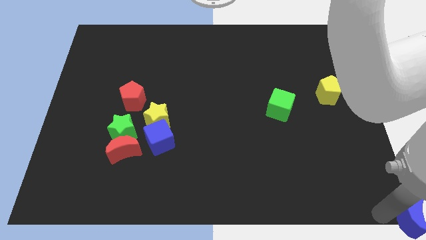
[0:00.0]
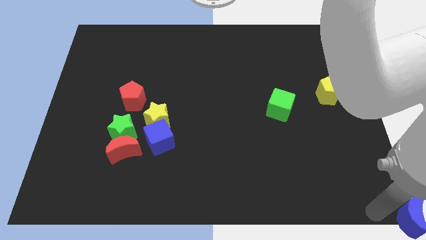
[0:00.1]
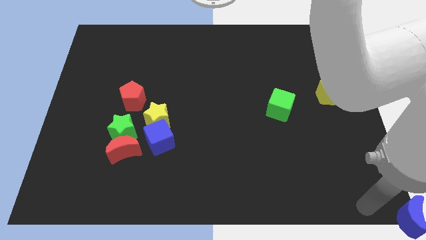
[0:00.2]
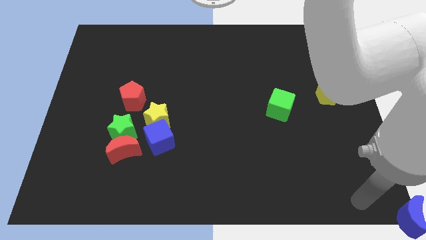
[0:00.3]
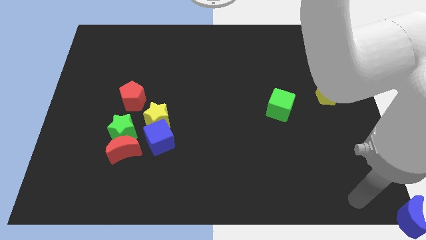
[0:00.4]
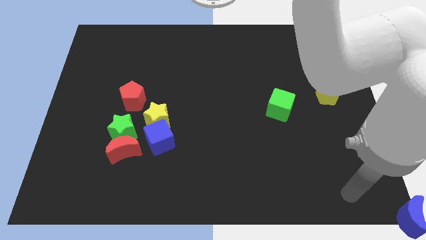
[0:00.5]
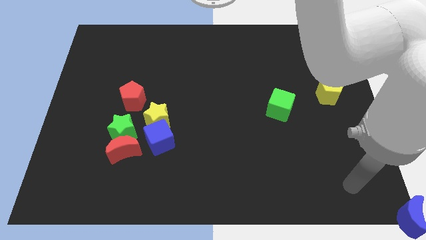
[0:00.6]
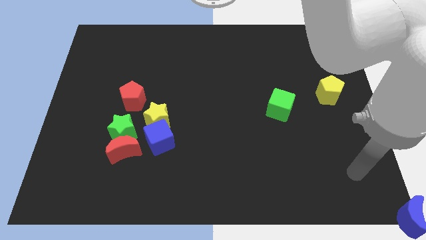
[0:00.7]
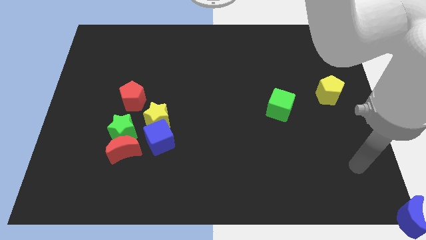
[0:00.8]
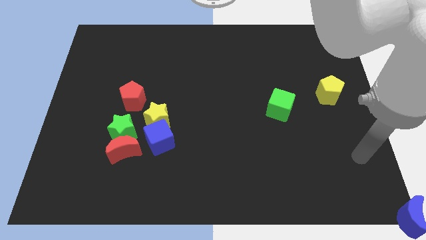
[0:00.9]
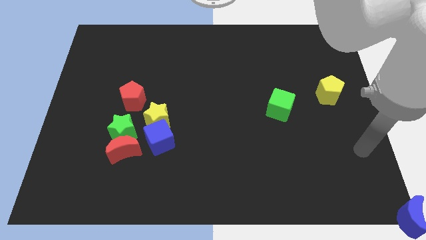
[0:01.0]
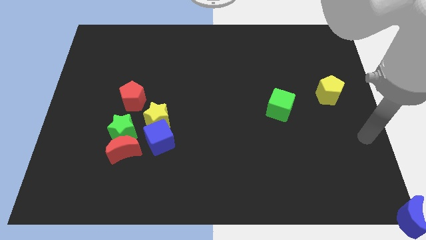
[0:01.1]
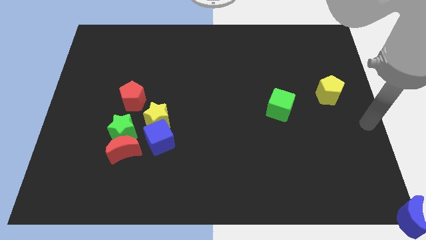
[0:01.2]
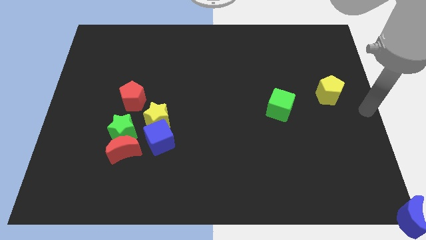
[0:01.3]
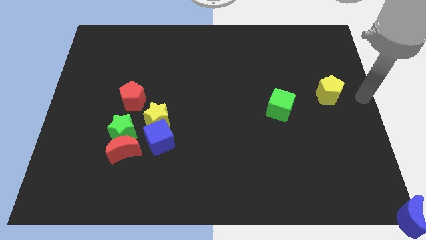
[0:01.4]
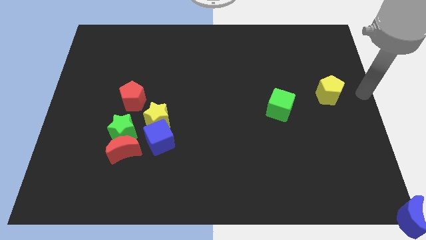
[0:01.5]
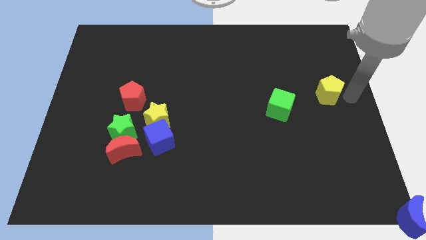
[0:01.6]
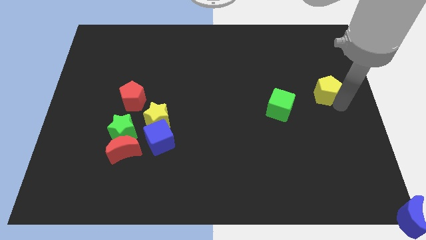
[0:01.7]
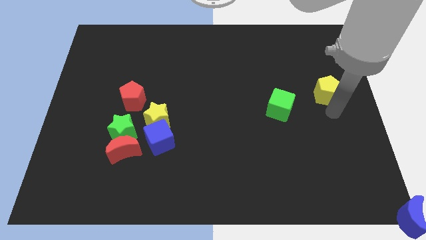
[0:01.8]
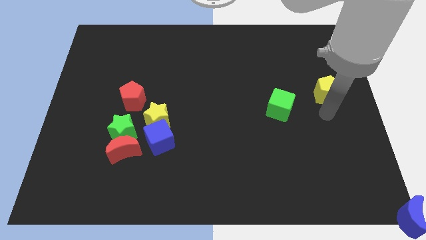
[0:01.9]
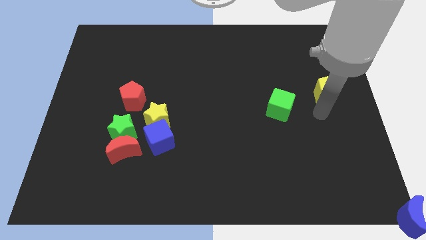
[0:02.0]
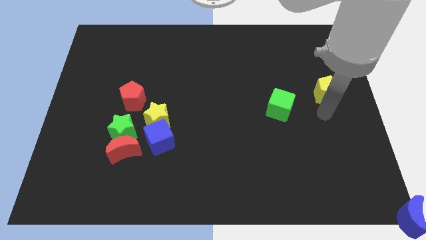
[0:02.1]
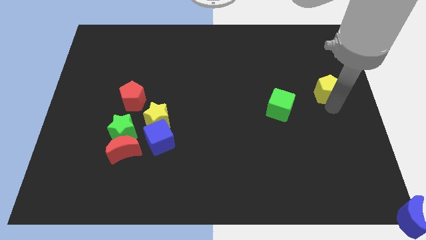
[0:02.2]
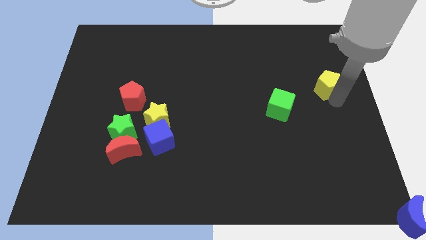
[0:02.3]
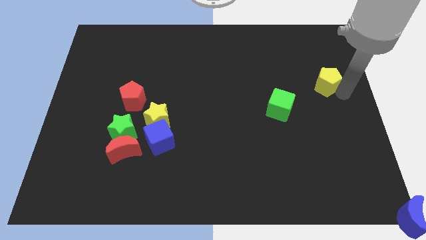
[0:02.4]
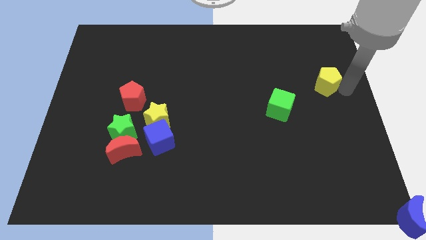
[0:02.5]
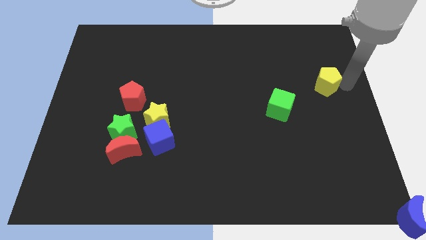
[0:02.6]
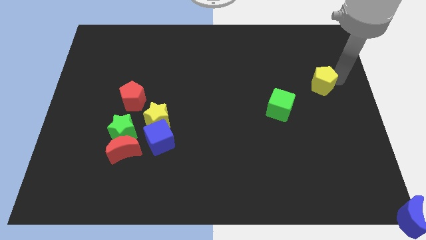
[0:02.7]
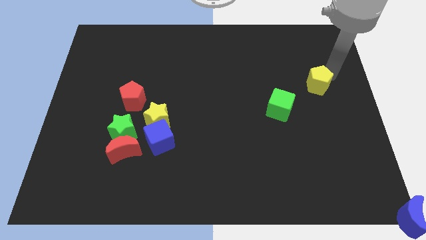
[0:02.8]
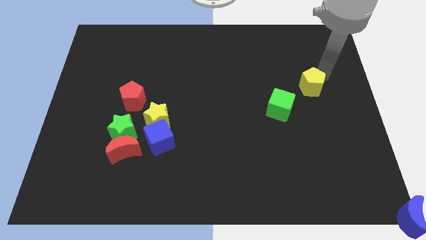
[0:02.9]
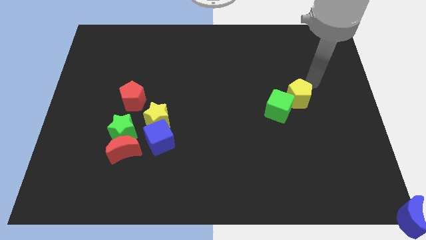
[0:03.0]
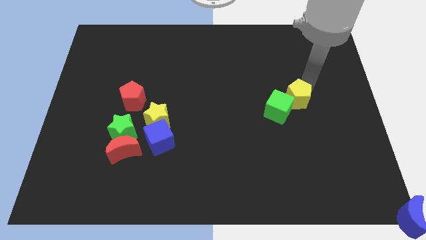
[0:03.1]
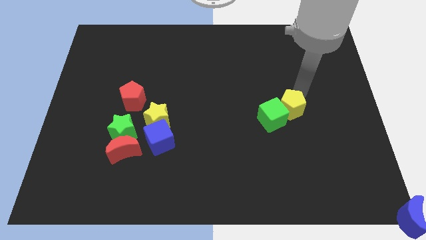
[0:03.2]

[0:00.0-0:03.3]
push the yellow pentagon to the top right of the green cube

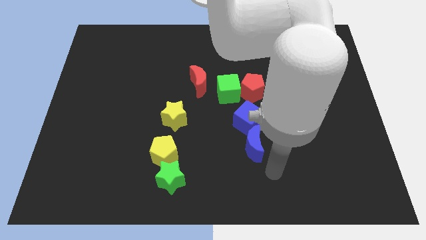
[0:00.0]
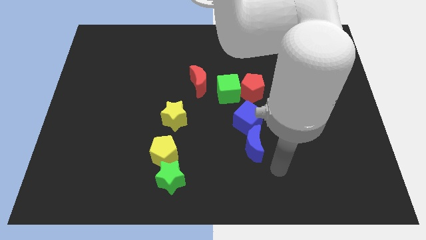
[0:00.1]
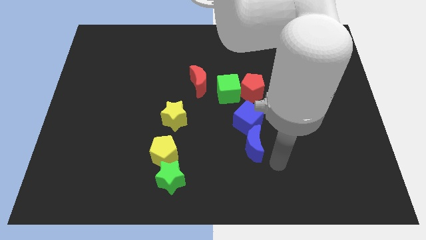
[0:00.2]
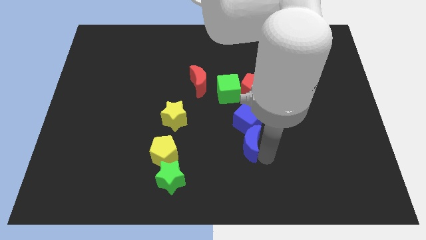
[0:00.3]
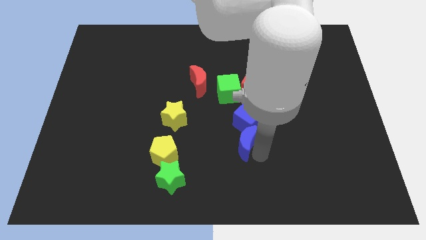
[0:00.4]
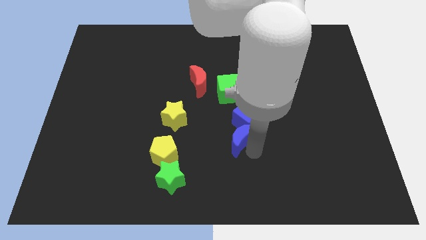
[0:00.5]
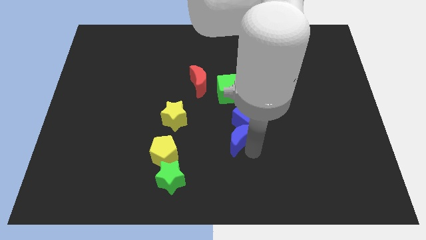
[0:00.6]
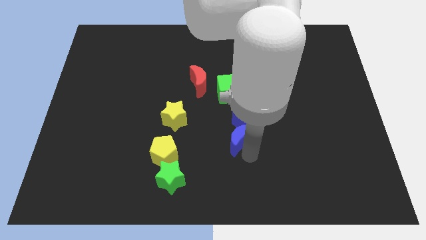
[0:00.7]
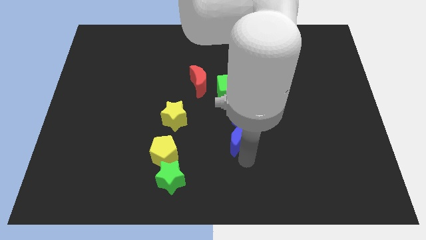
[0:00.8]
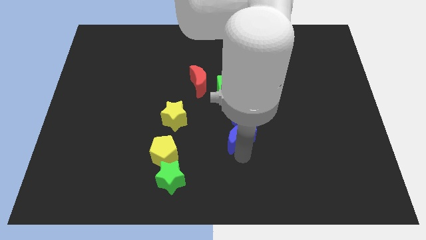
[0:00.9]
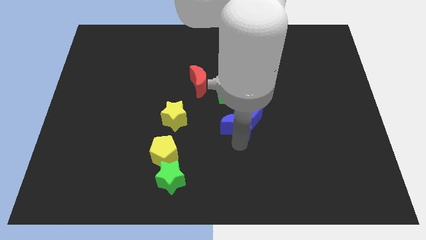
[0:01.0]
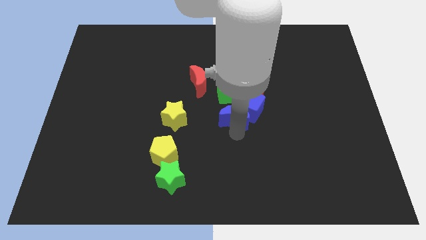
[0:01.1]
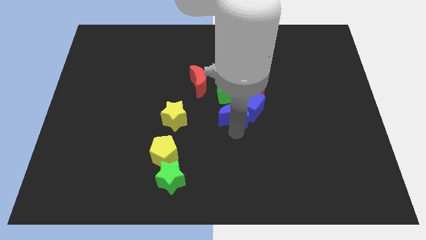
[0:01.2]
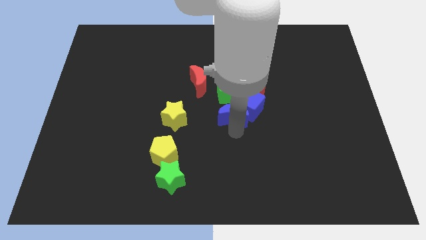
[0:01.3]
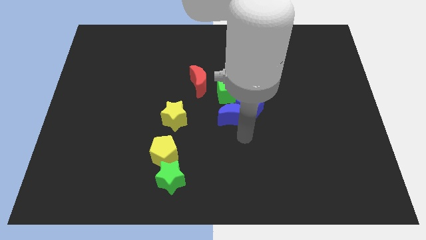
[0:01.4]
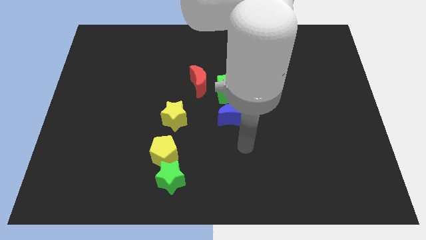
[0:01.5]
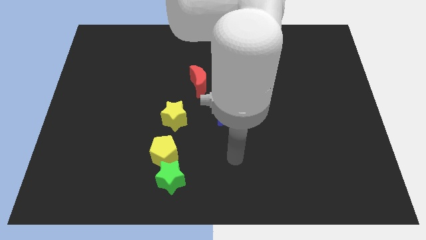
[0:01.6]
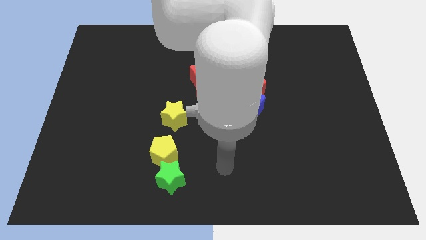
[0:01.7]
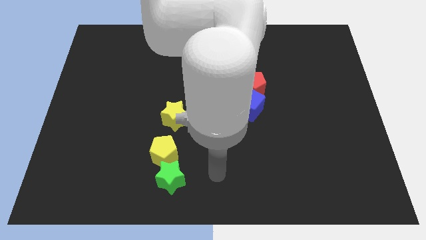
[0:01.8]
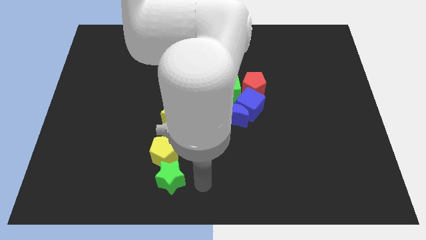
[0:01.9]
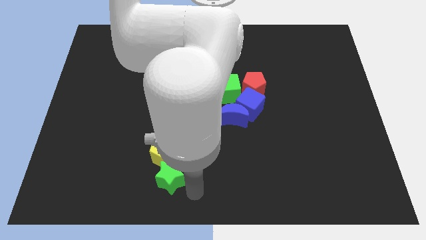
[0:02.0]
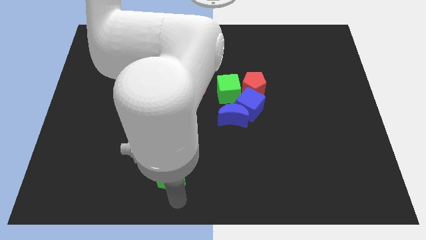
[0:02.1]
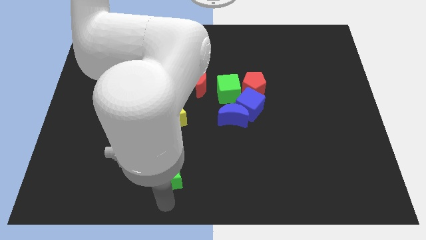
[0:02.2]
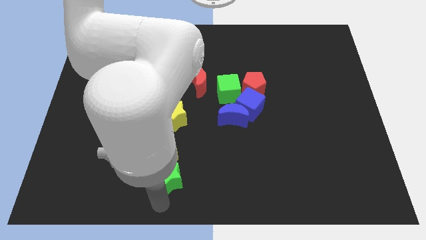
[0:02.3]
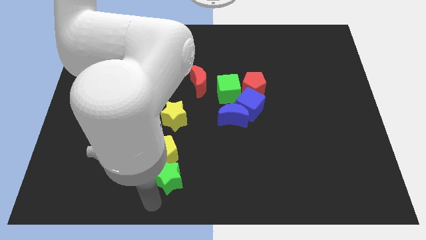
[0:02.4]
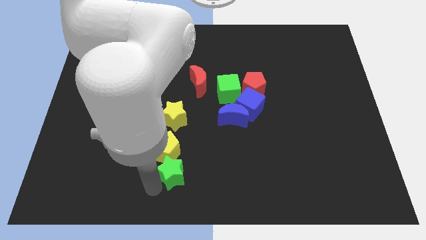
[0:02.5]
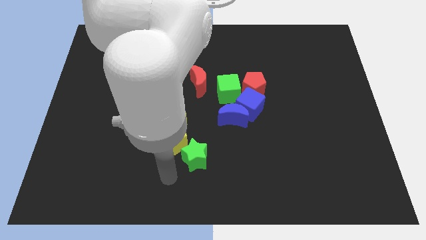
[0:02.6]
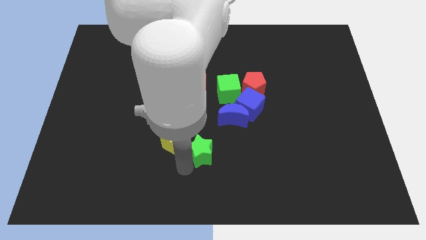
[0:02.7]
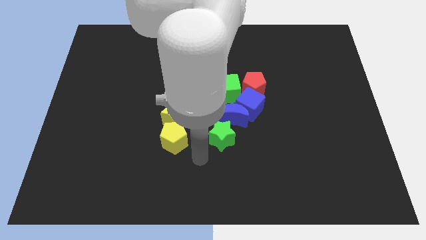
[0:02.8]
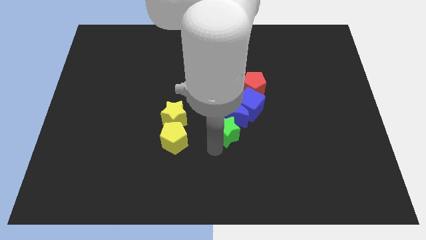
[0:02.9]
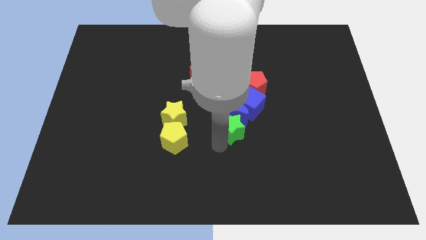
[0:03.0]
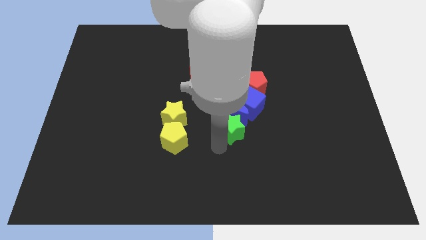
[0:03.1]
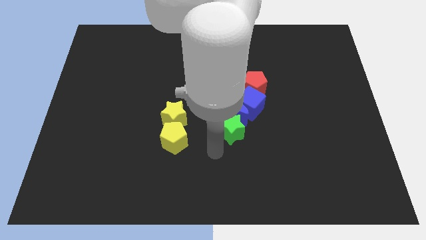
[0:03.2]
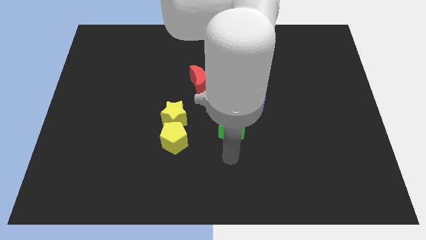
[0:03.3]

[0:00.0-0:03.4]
place the green star below the blue moon

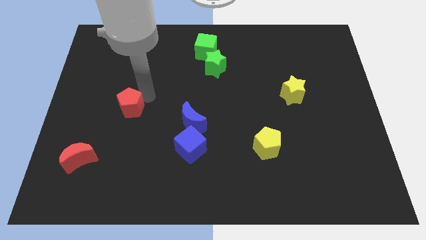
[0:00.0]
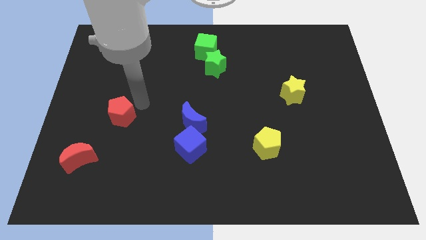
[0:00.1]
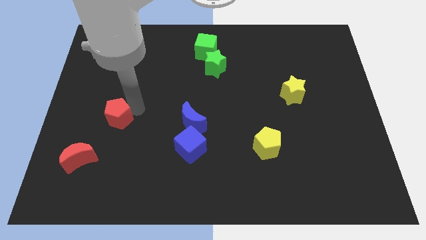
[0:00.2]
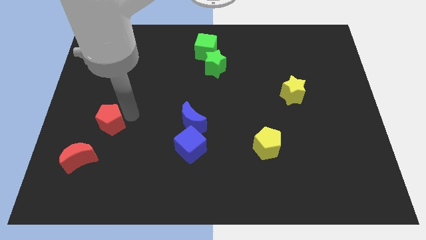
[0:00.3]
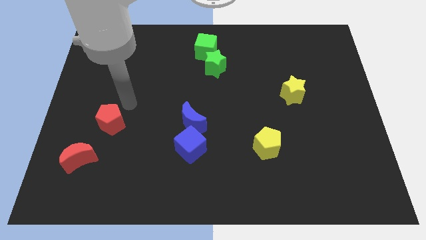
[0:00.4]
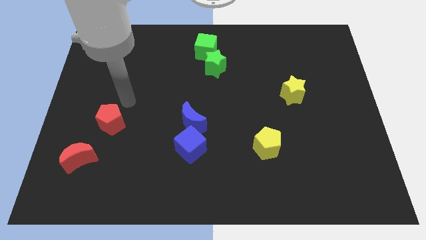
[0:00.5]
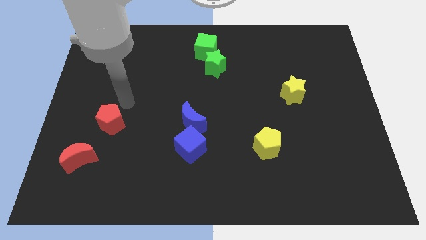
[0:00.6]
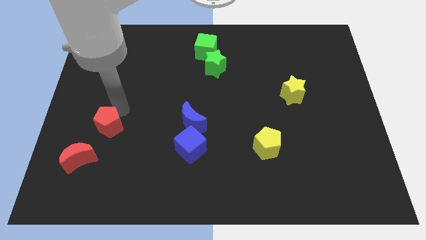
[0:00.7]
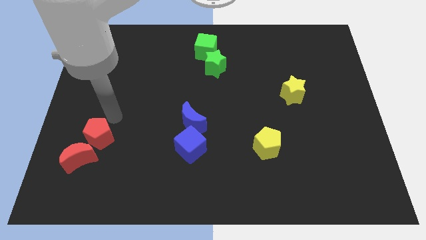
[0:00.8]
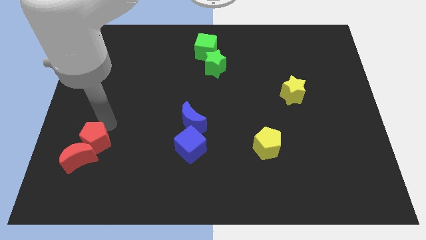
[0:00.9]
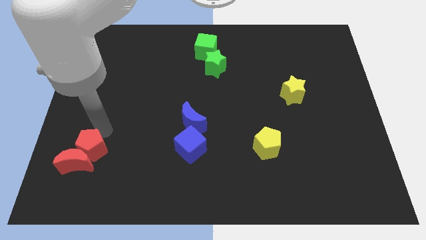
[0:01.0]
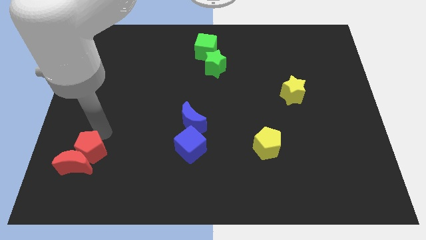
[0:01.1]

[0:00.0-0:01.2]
push the red pentagon into red crescent

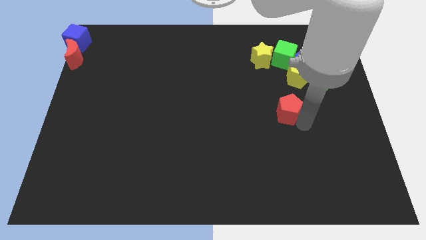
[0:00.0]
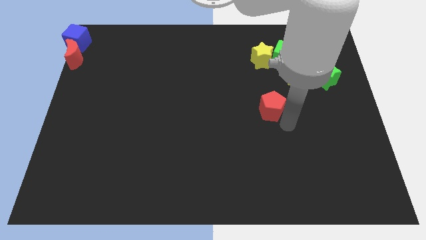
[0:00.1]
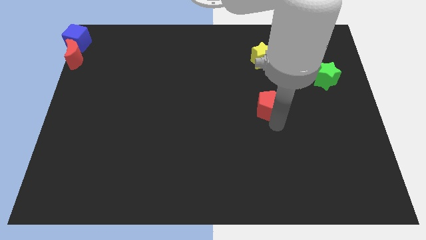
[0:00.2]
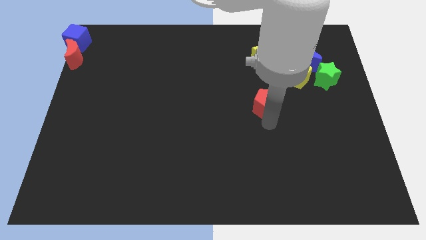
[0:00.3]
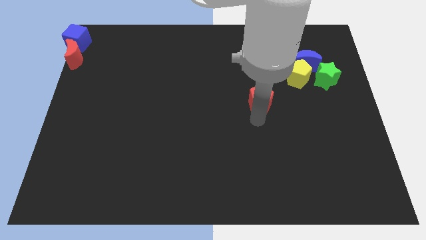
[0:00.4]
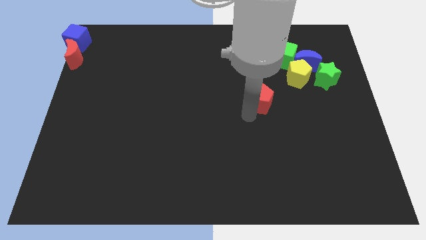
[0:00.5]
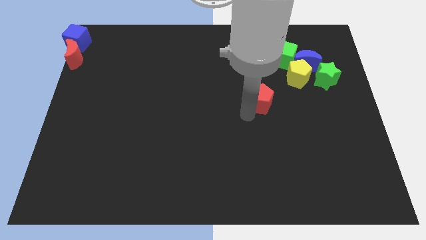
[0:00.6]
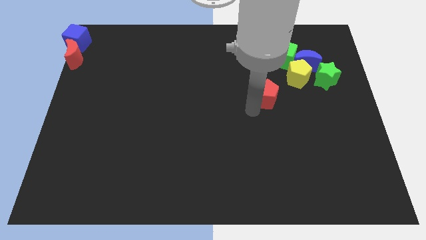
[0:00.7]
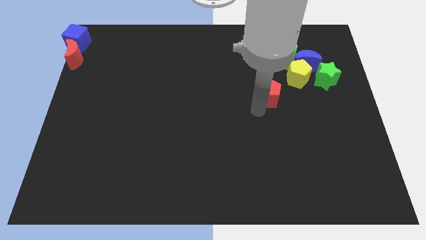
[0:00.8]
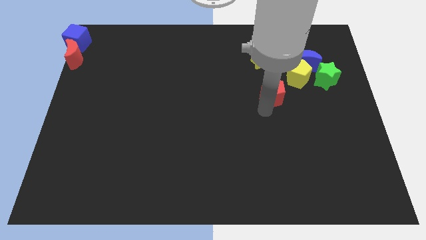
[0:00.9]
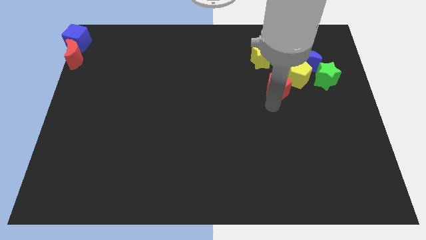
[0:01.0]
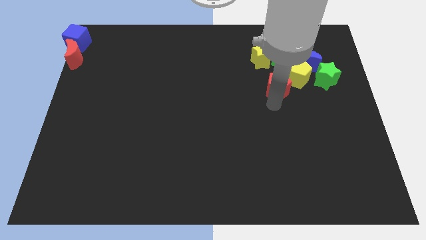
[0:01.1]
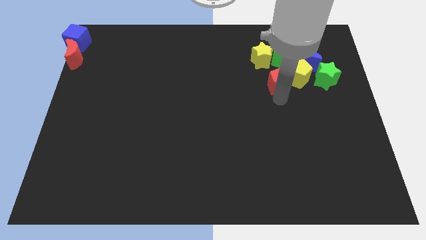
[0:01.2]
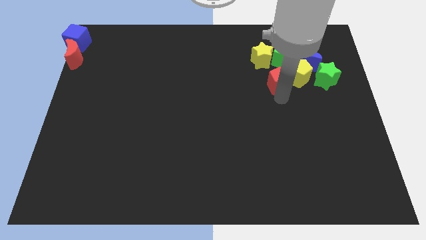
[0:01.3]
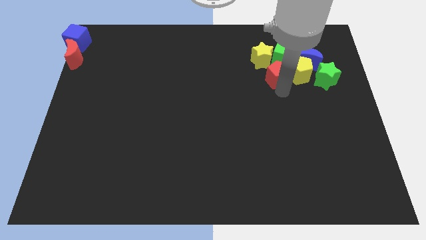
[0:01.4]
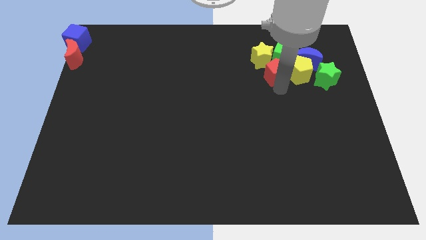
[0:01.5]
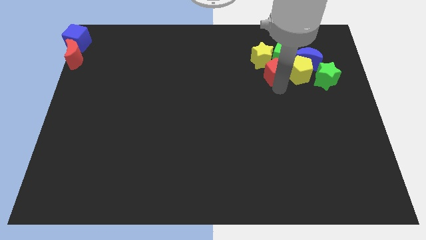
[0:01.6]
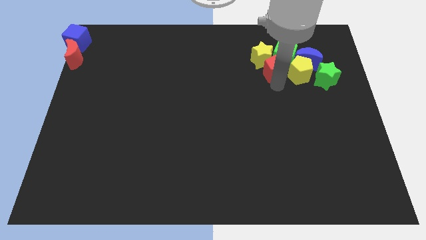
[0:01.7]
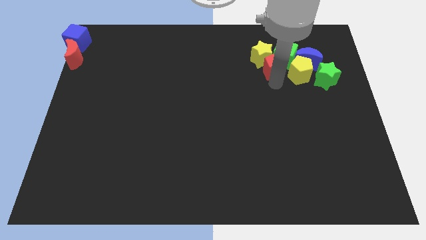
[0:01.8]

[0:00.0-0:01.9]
move the red pentagon into the yellow star
